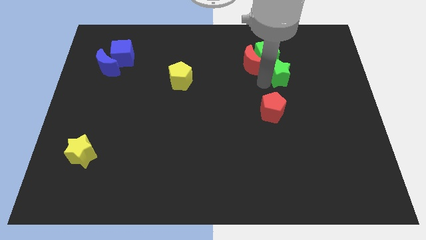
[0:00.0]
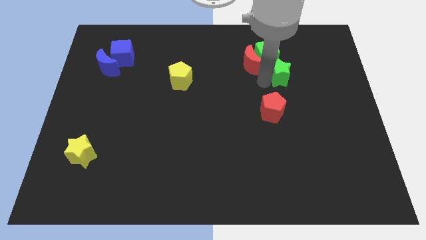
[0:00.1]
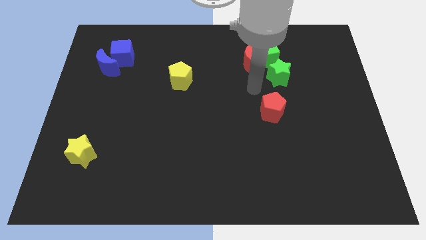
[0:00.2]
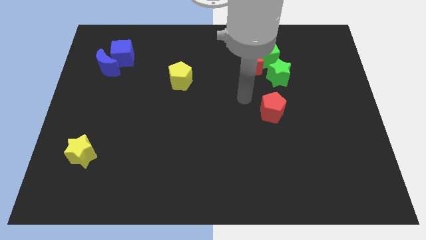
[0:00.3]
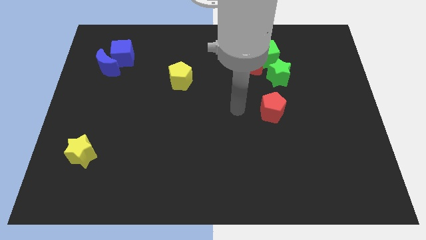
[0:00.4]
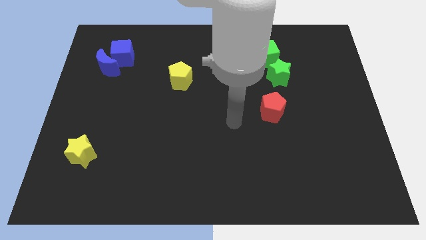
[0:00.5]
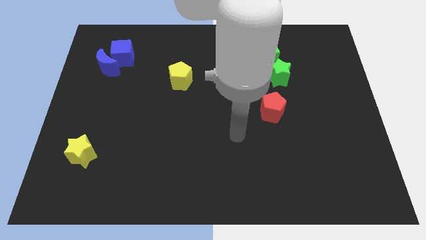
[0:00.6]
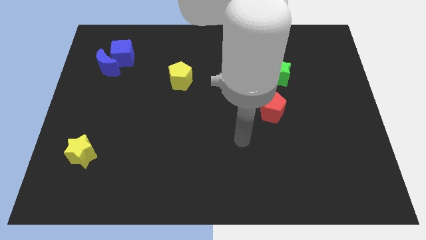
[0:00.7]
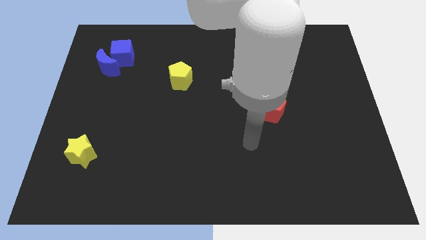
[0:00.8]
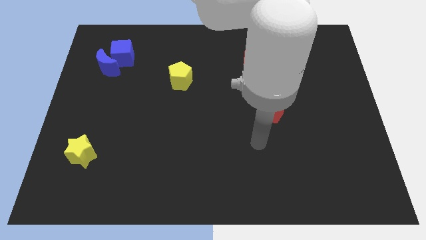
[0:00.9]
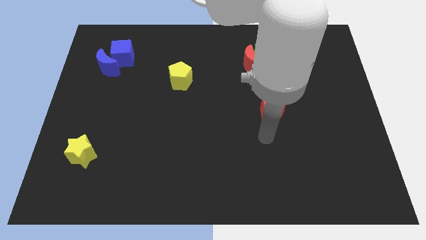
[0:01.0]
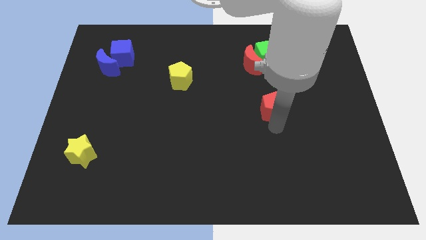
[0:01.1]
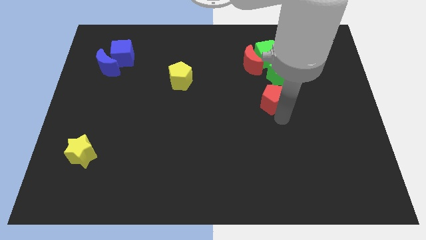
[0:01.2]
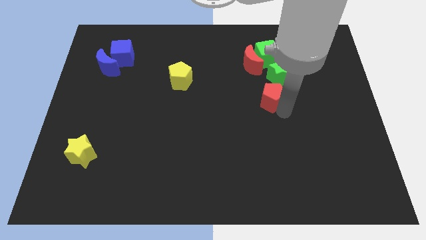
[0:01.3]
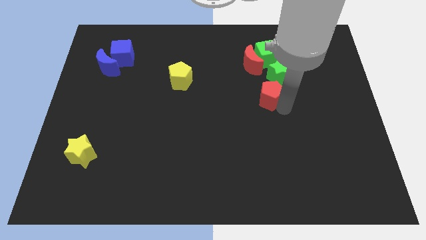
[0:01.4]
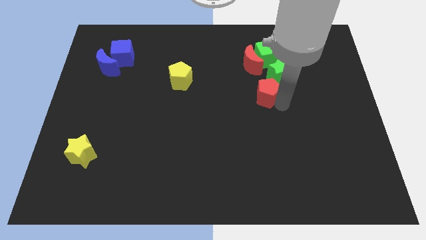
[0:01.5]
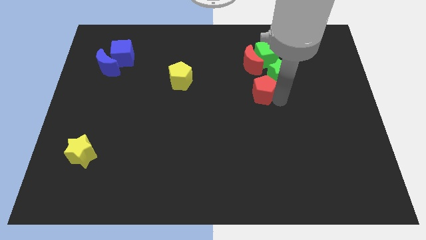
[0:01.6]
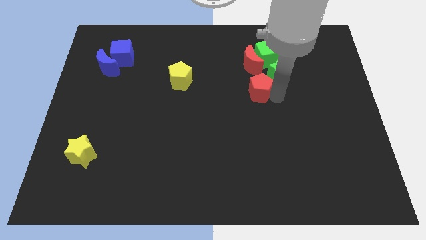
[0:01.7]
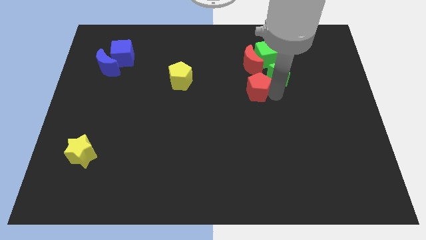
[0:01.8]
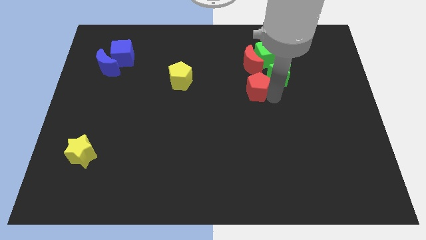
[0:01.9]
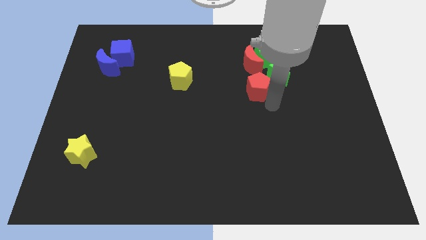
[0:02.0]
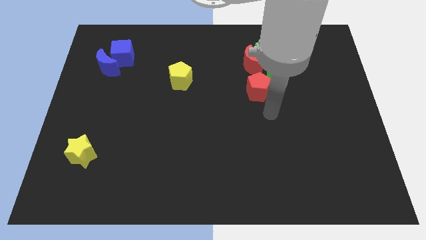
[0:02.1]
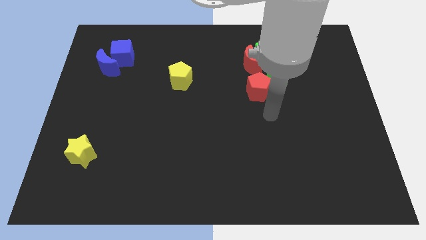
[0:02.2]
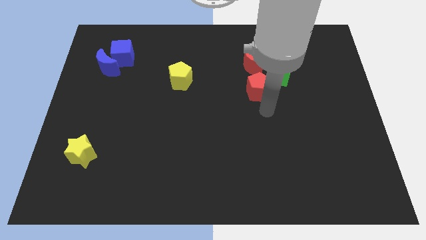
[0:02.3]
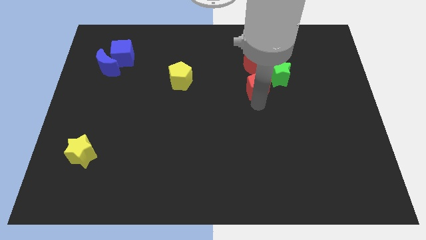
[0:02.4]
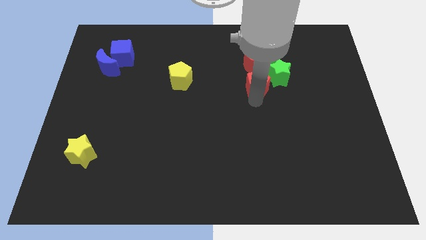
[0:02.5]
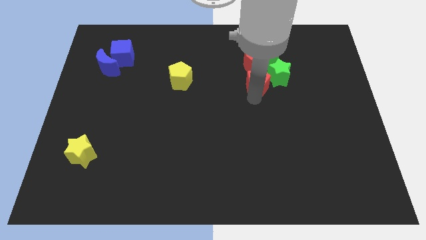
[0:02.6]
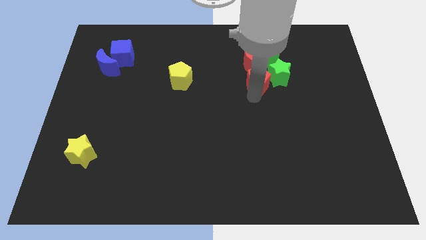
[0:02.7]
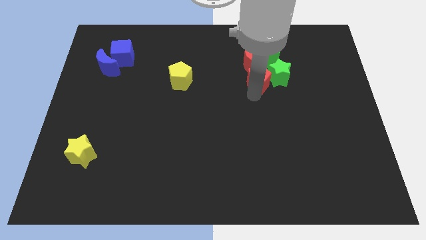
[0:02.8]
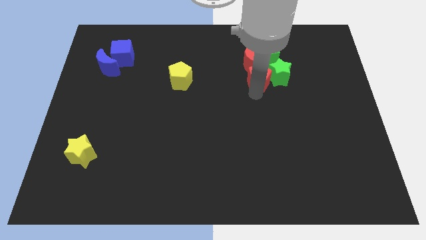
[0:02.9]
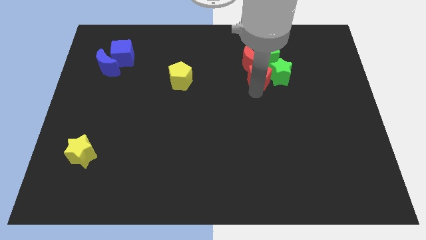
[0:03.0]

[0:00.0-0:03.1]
move red pentagon close to the objects

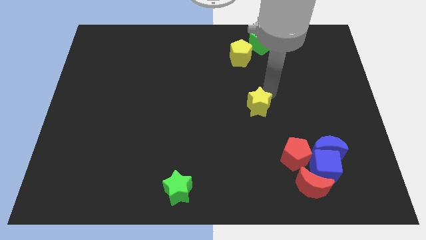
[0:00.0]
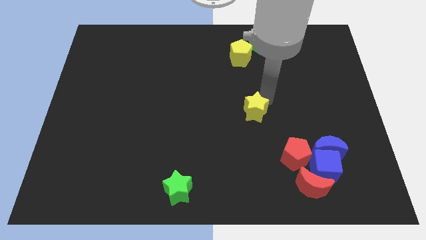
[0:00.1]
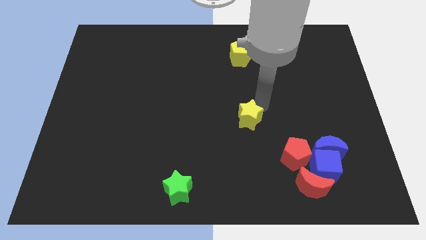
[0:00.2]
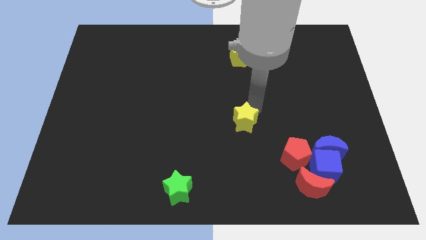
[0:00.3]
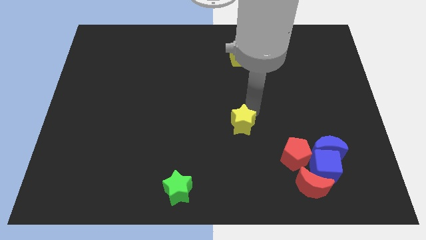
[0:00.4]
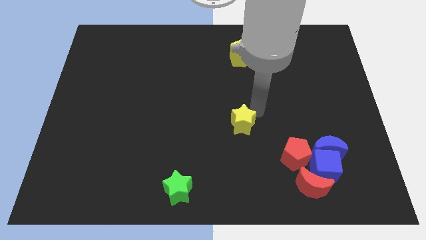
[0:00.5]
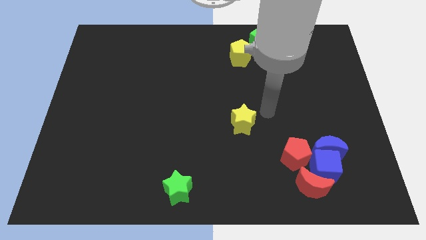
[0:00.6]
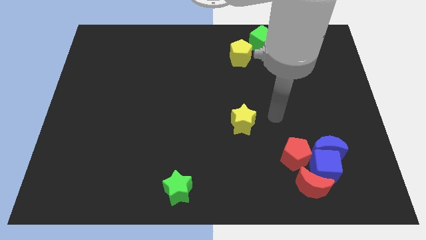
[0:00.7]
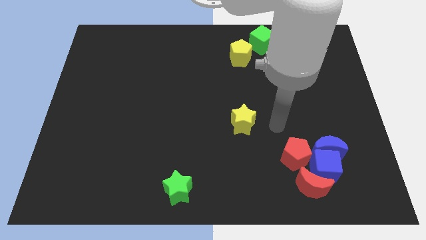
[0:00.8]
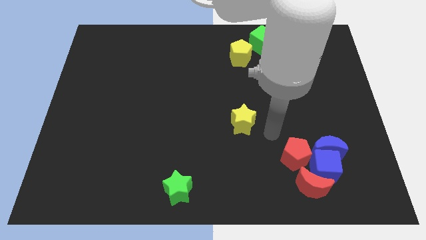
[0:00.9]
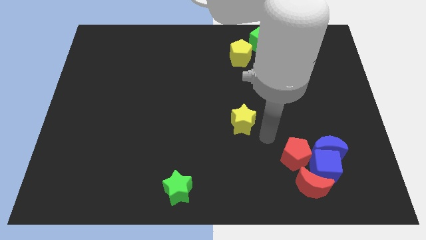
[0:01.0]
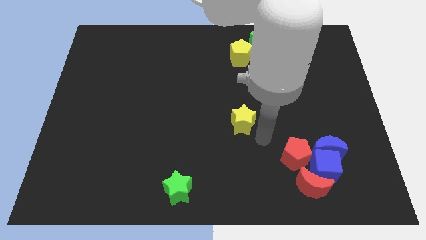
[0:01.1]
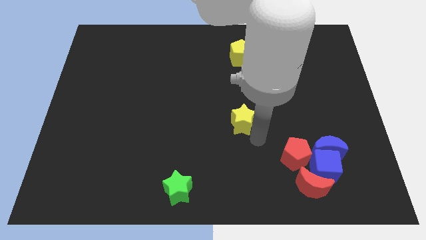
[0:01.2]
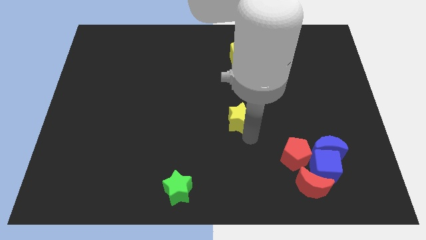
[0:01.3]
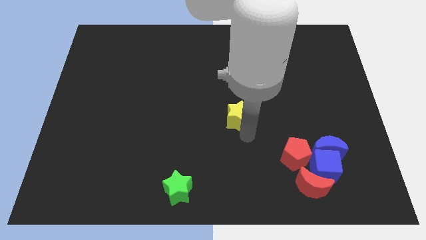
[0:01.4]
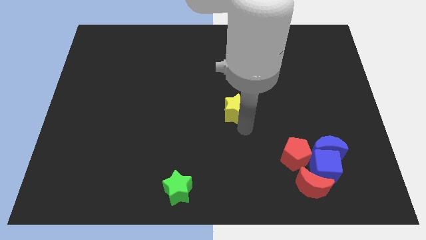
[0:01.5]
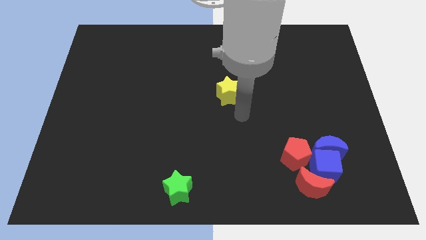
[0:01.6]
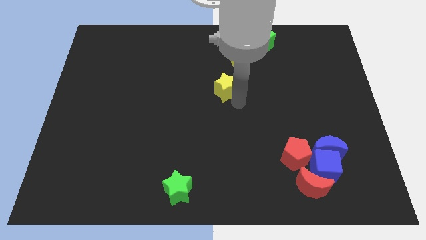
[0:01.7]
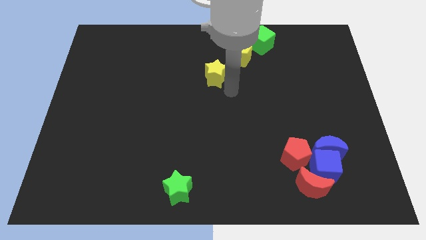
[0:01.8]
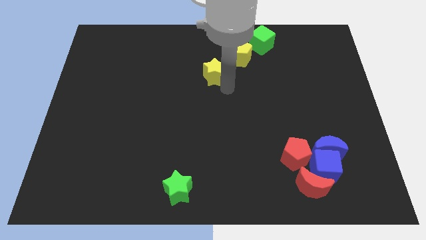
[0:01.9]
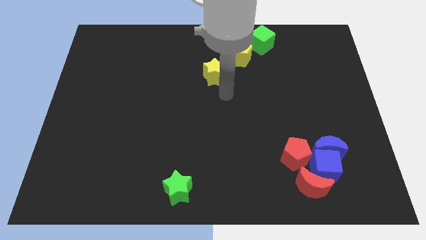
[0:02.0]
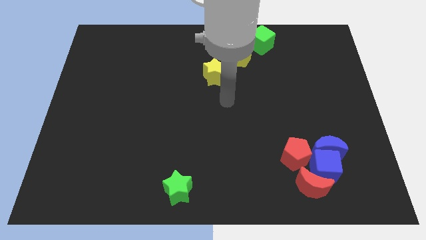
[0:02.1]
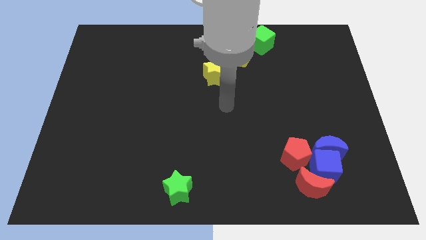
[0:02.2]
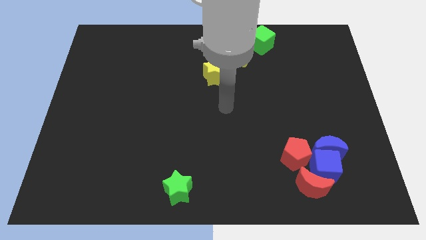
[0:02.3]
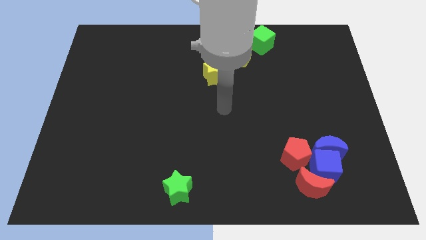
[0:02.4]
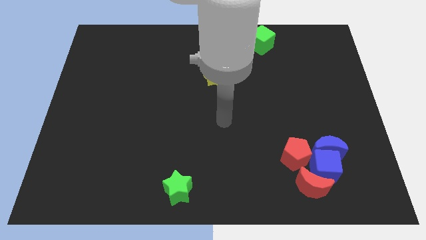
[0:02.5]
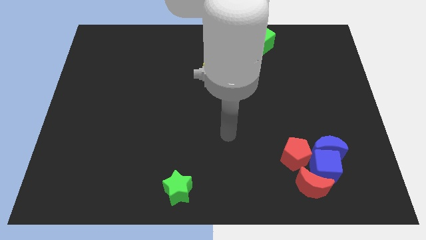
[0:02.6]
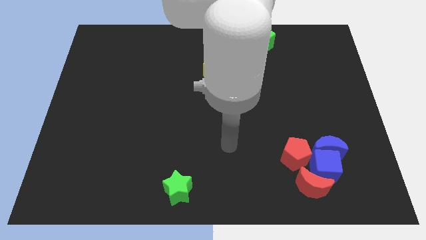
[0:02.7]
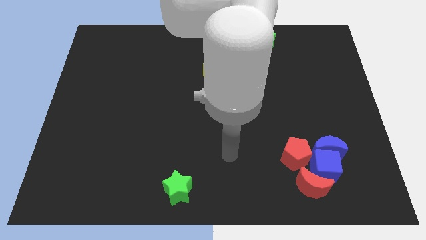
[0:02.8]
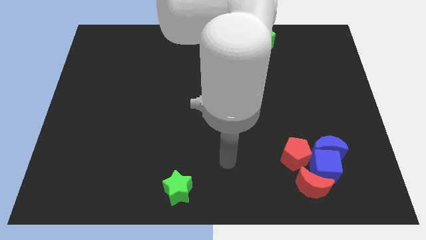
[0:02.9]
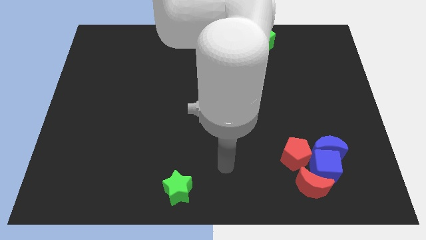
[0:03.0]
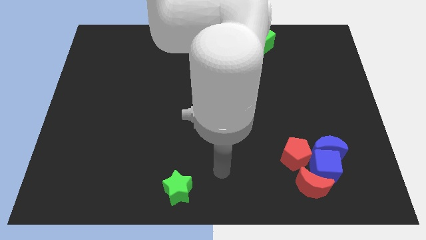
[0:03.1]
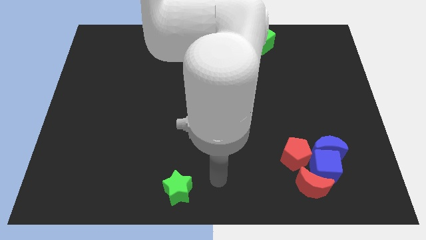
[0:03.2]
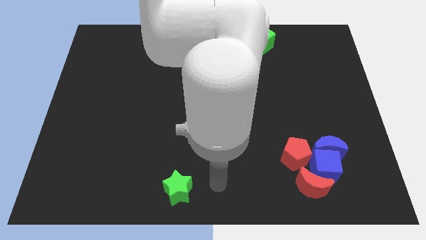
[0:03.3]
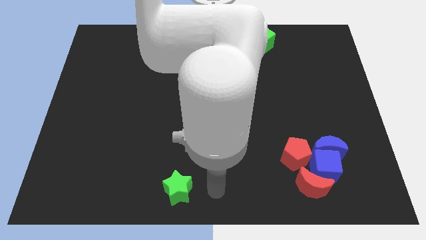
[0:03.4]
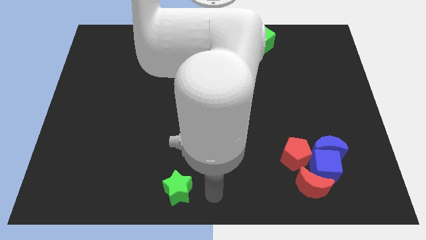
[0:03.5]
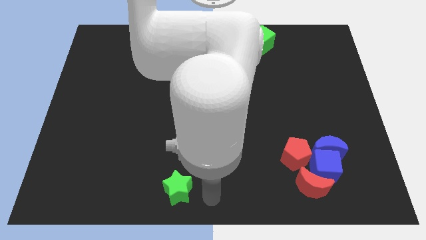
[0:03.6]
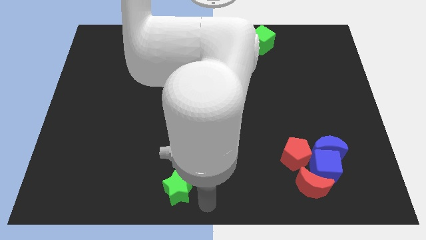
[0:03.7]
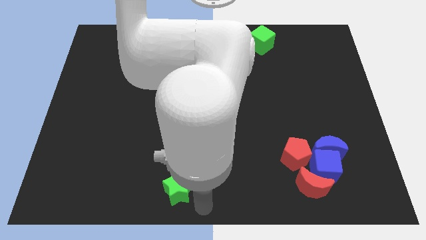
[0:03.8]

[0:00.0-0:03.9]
push the yellow star towards the yellow pentagon

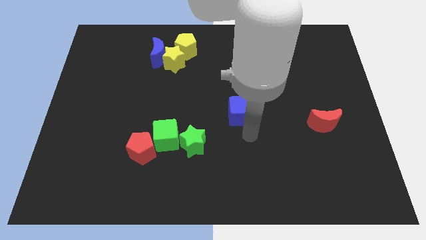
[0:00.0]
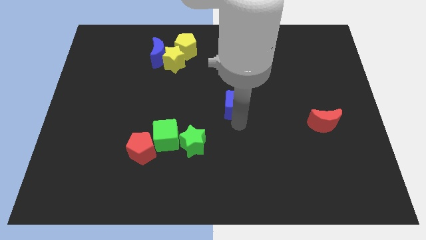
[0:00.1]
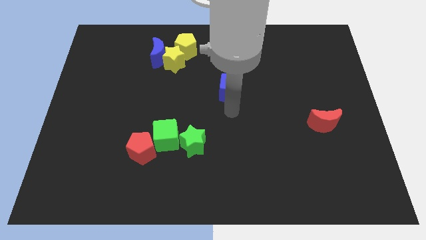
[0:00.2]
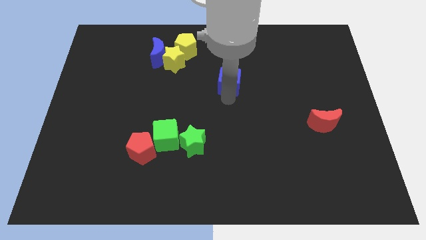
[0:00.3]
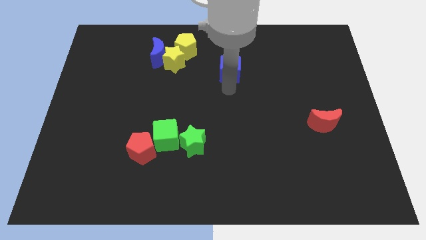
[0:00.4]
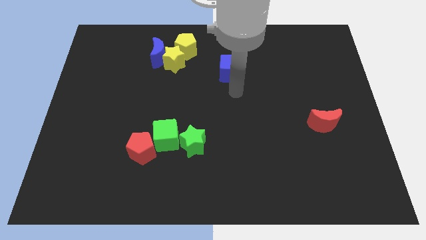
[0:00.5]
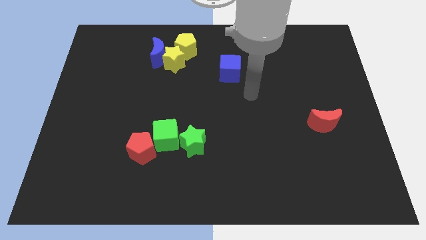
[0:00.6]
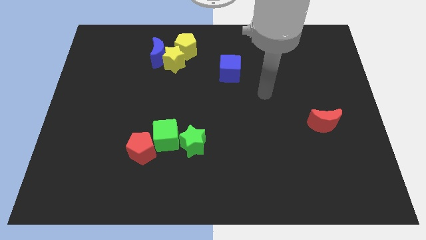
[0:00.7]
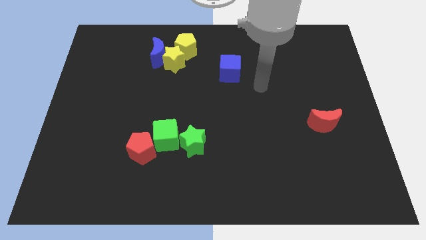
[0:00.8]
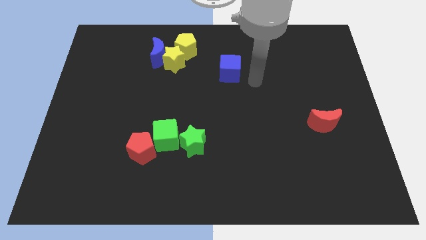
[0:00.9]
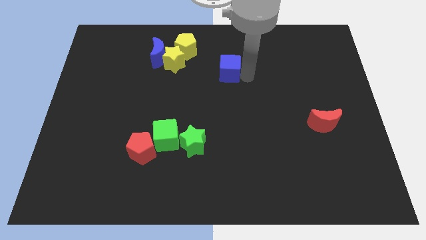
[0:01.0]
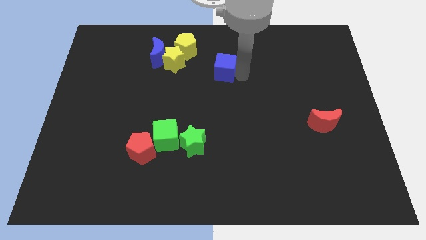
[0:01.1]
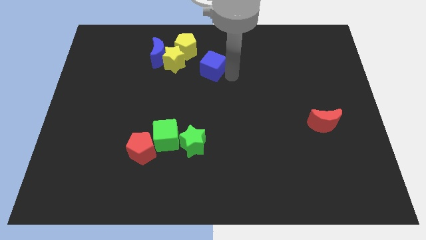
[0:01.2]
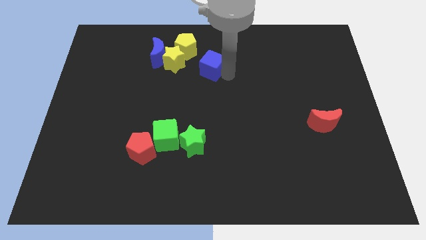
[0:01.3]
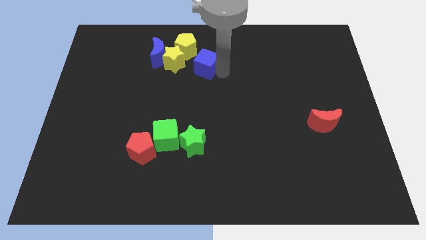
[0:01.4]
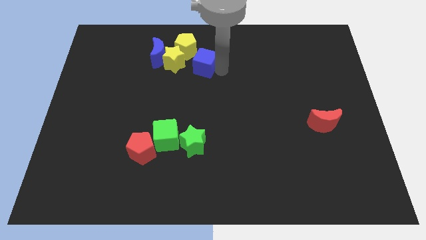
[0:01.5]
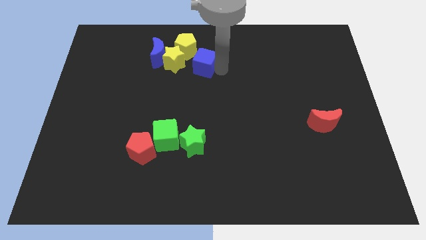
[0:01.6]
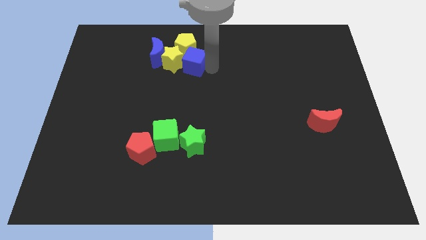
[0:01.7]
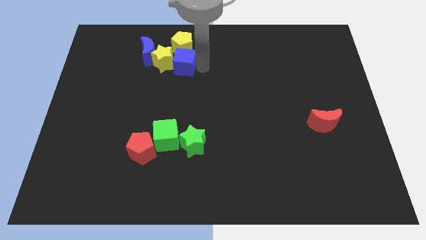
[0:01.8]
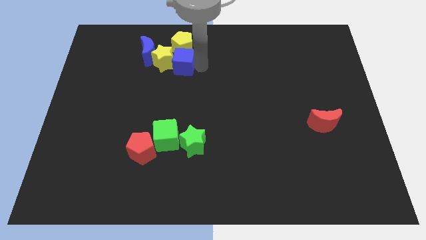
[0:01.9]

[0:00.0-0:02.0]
push the blue block towards the bottom right side of the yellow star

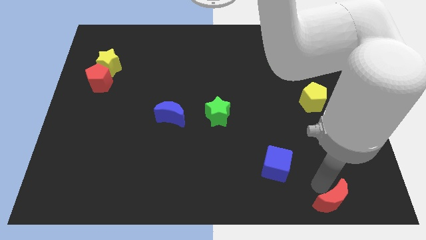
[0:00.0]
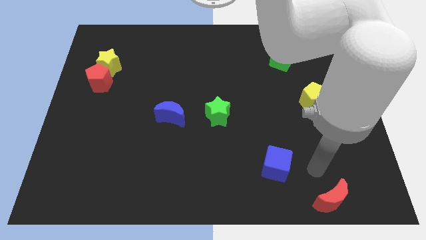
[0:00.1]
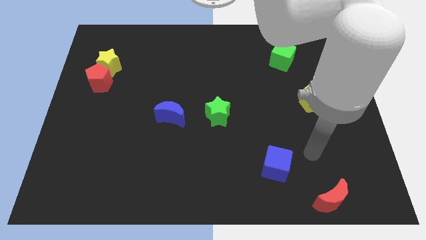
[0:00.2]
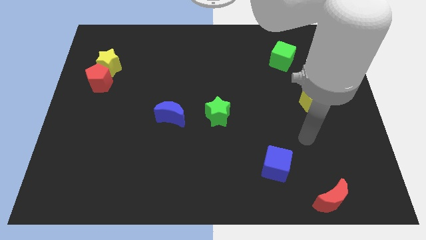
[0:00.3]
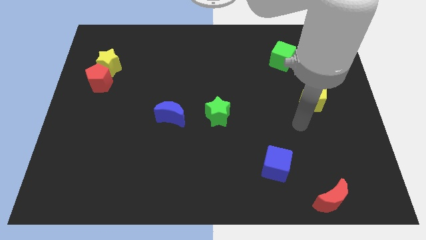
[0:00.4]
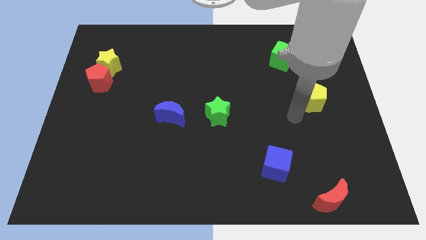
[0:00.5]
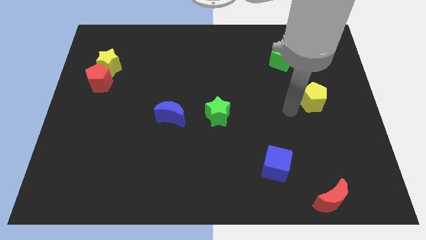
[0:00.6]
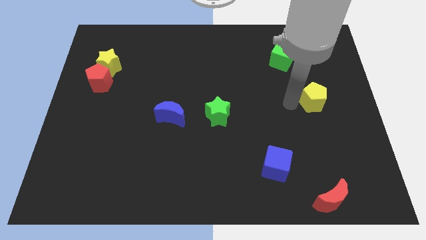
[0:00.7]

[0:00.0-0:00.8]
place your arm to the left side of yellow pentagon
